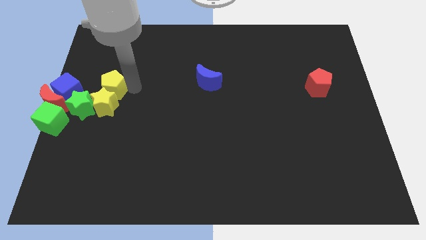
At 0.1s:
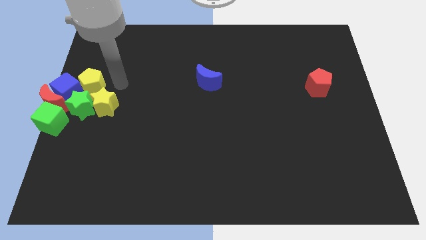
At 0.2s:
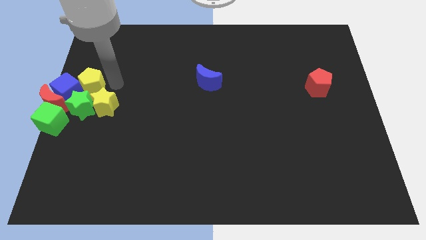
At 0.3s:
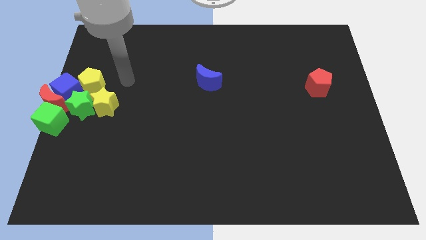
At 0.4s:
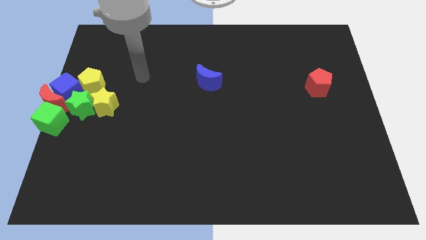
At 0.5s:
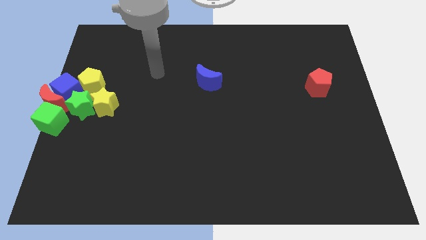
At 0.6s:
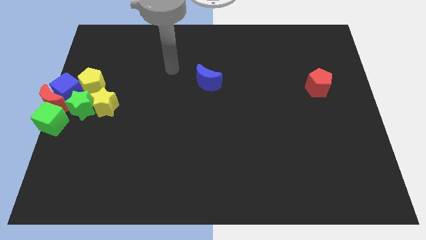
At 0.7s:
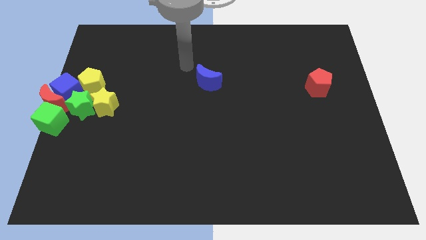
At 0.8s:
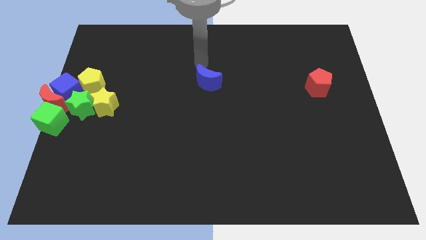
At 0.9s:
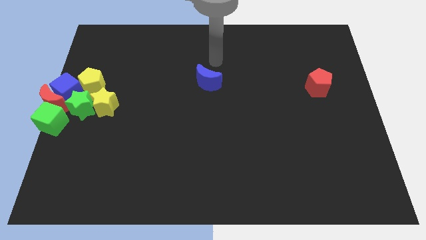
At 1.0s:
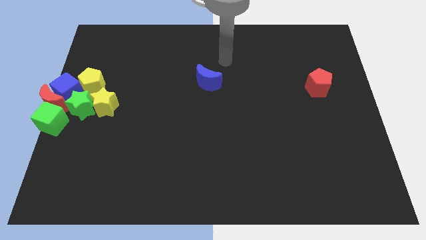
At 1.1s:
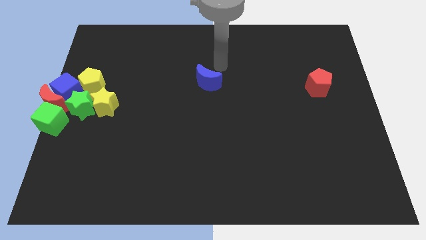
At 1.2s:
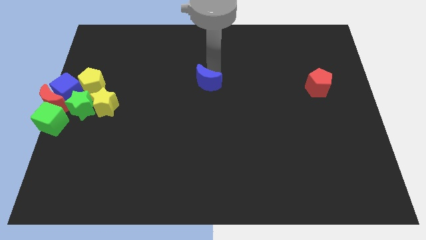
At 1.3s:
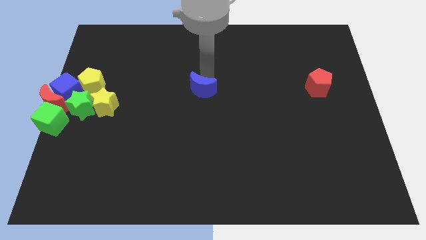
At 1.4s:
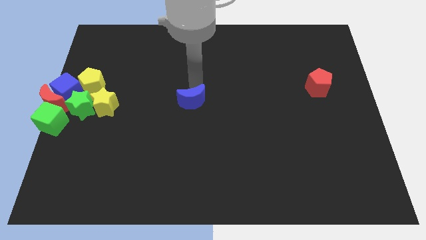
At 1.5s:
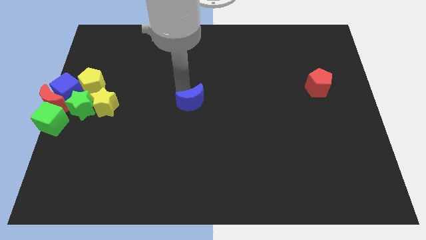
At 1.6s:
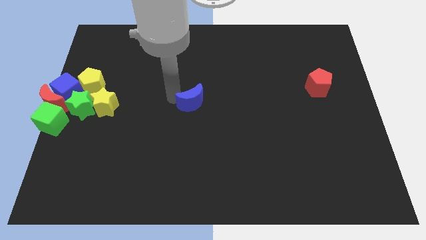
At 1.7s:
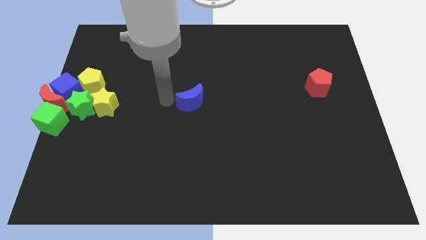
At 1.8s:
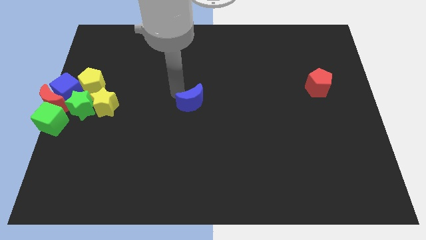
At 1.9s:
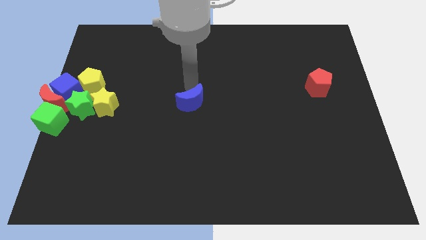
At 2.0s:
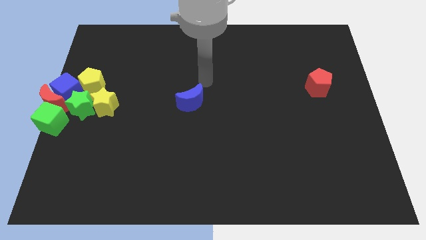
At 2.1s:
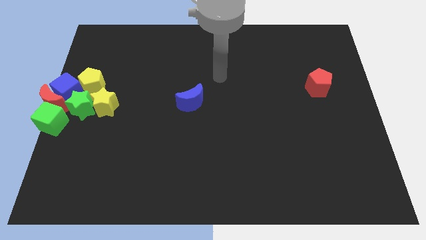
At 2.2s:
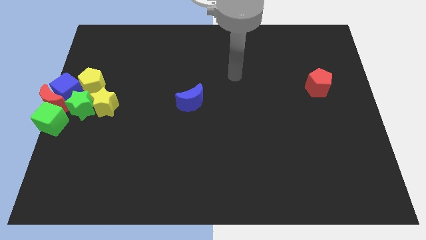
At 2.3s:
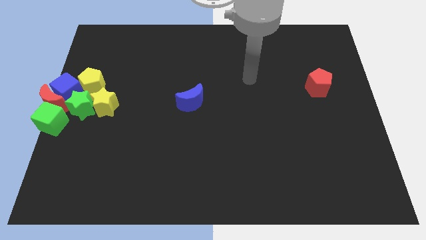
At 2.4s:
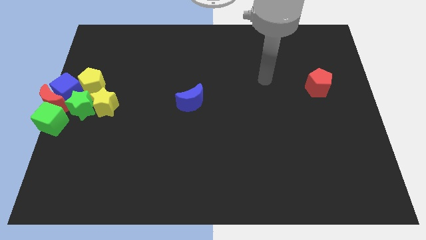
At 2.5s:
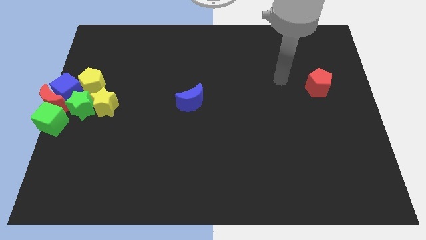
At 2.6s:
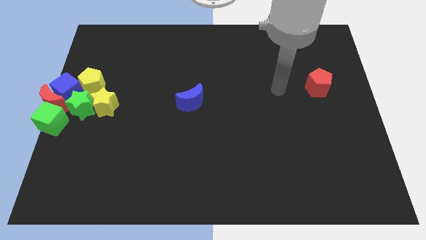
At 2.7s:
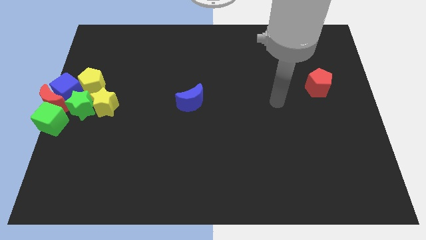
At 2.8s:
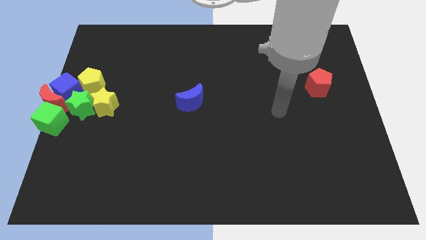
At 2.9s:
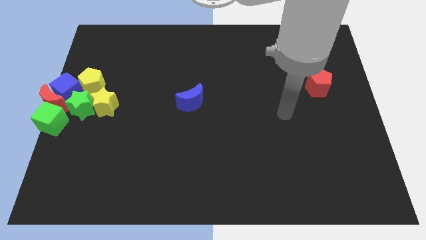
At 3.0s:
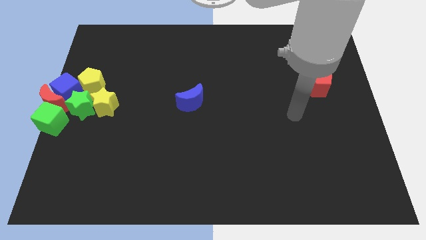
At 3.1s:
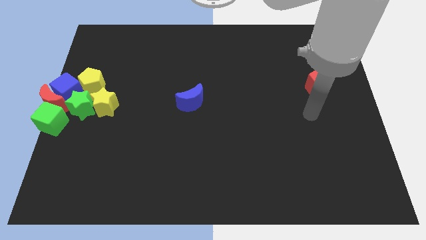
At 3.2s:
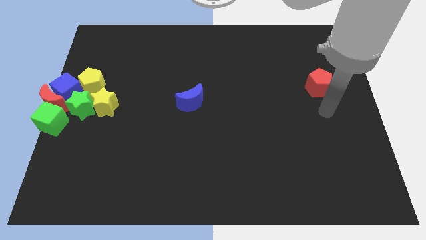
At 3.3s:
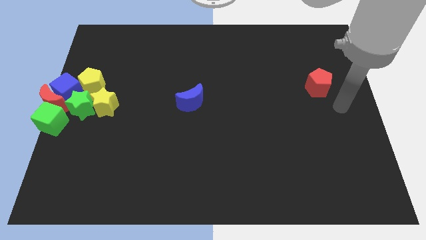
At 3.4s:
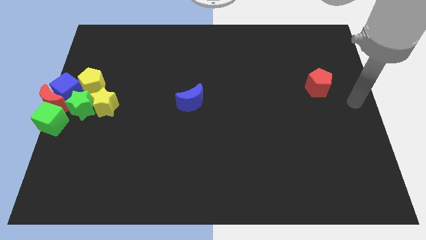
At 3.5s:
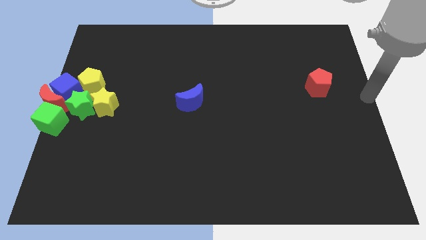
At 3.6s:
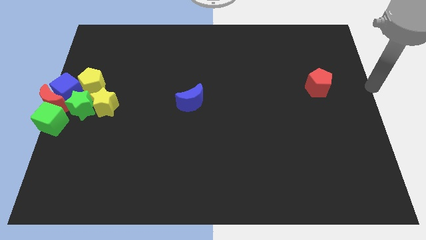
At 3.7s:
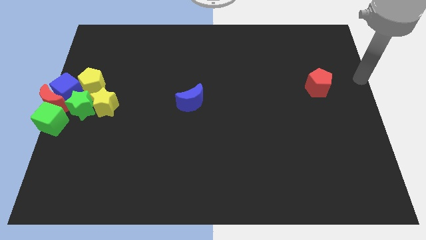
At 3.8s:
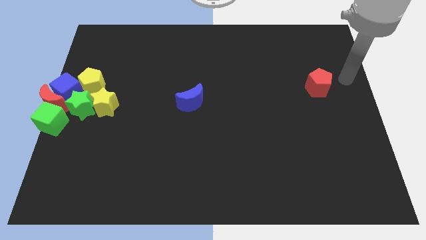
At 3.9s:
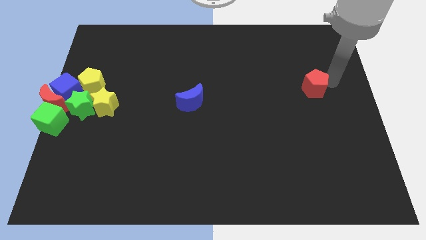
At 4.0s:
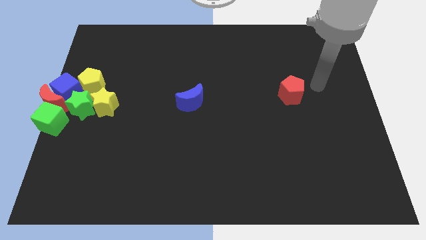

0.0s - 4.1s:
place the blue moon to right side of yellow star

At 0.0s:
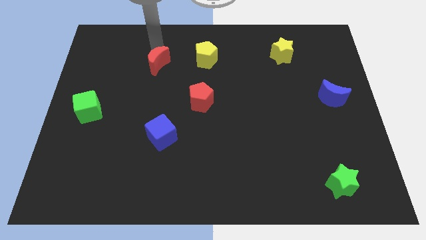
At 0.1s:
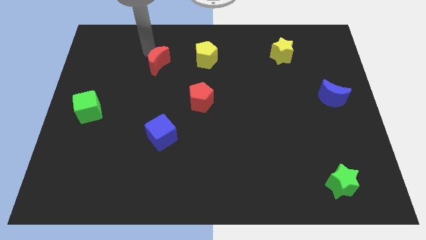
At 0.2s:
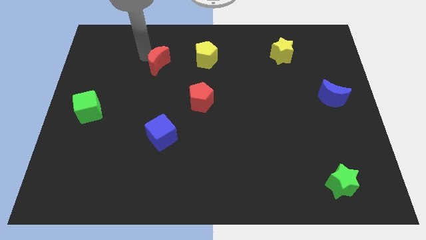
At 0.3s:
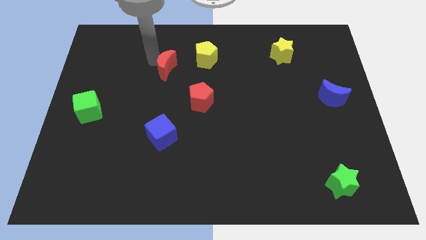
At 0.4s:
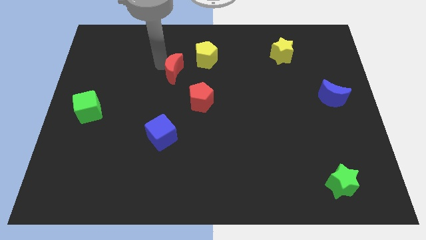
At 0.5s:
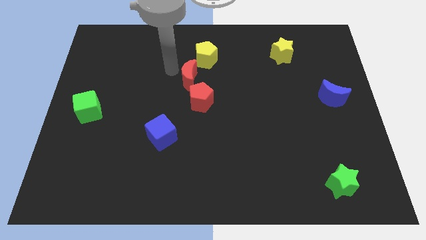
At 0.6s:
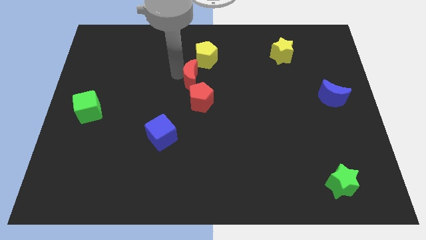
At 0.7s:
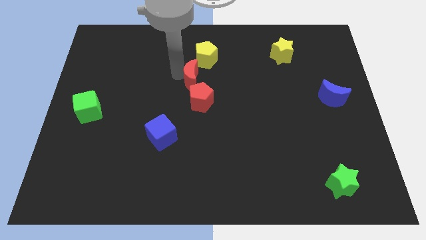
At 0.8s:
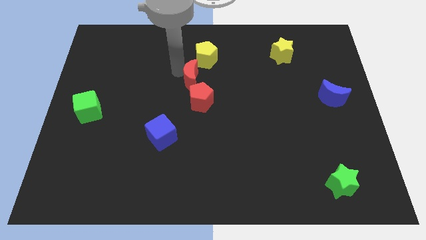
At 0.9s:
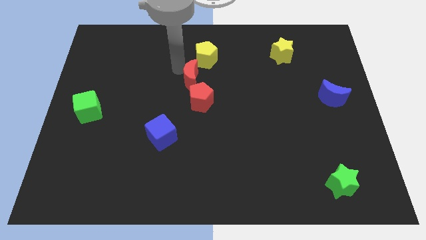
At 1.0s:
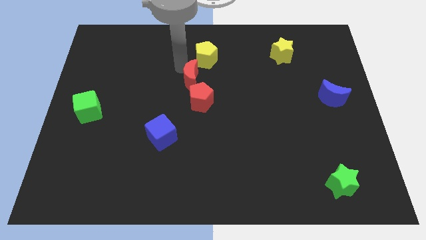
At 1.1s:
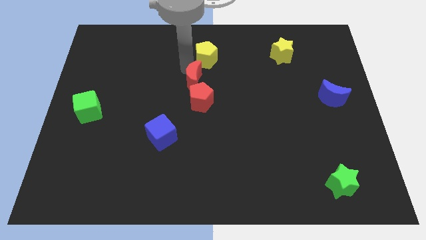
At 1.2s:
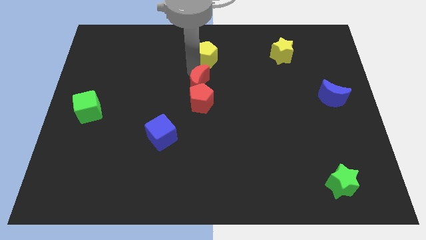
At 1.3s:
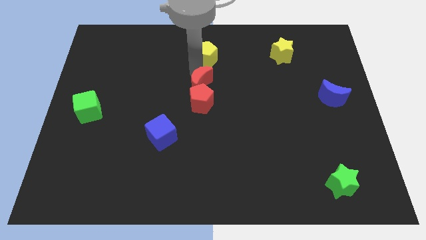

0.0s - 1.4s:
push the red crescent into the red pentagon

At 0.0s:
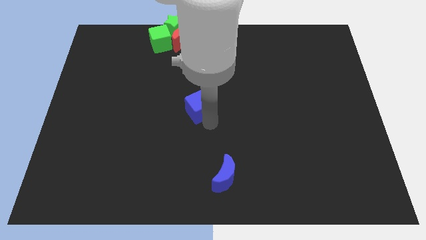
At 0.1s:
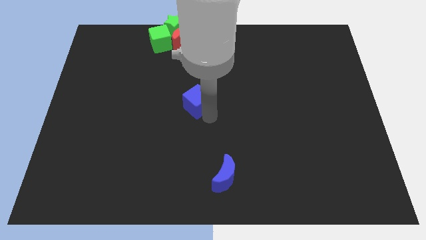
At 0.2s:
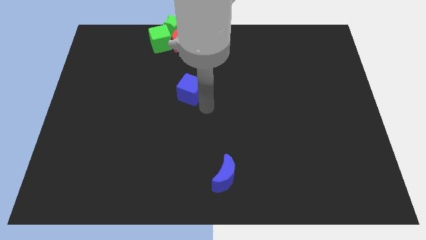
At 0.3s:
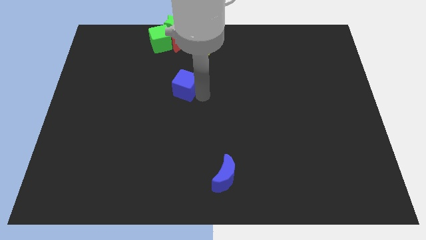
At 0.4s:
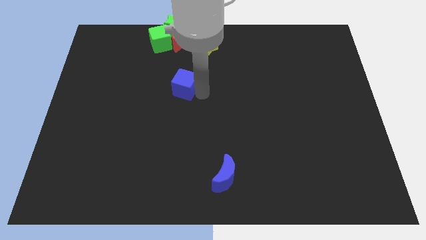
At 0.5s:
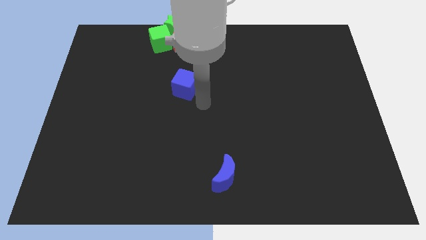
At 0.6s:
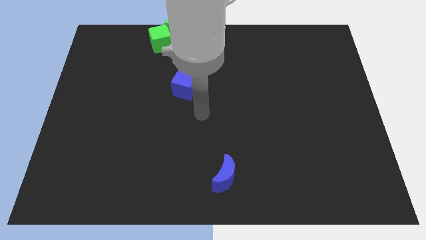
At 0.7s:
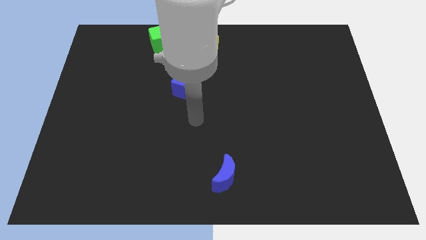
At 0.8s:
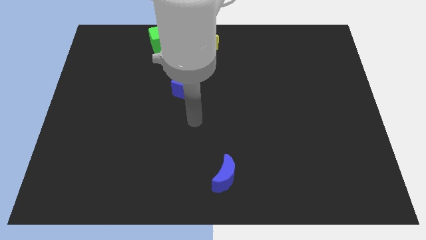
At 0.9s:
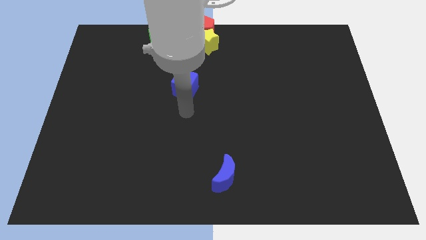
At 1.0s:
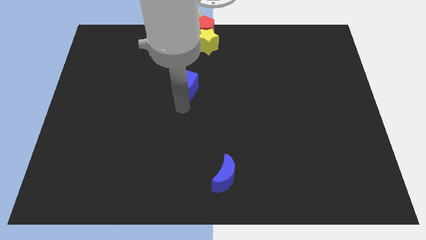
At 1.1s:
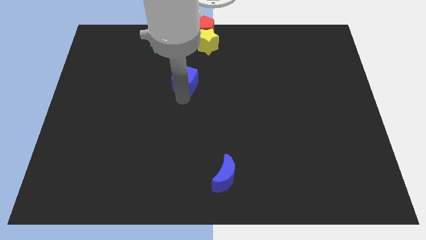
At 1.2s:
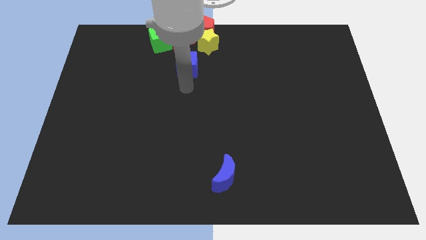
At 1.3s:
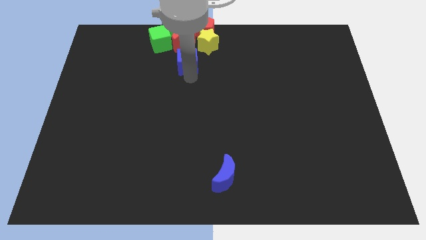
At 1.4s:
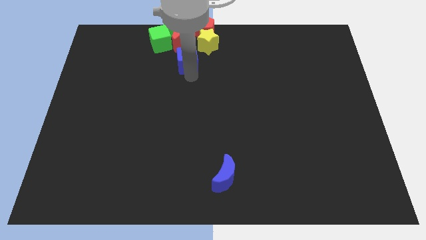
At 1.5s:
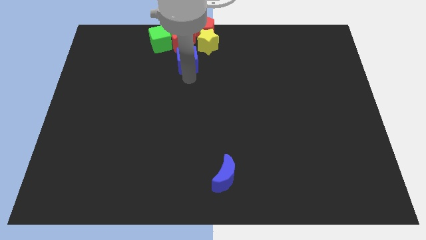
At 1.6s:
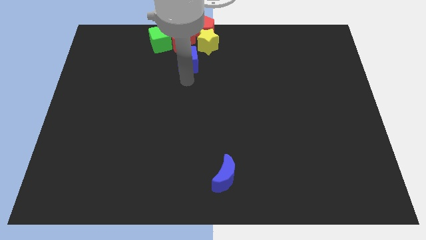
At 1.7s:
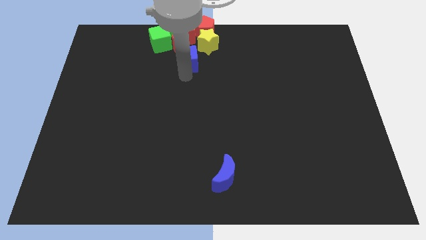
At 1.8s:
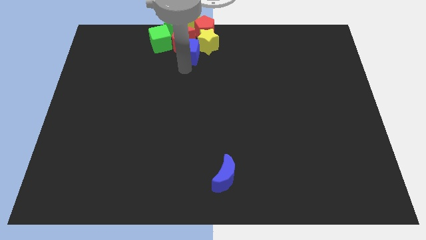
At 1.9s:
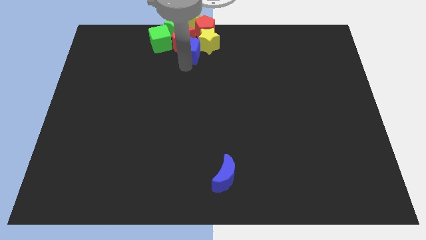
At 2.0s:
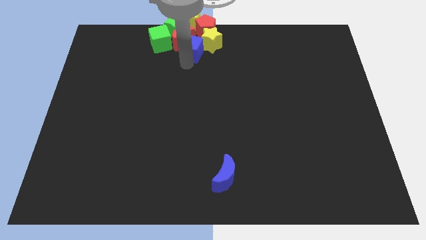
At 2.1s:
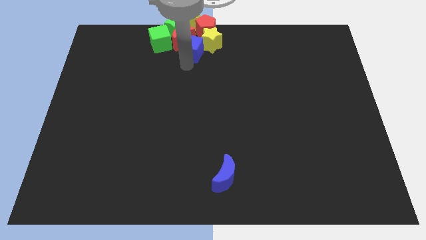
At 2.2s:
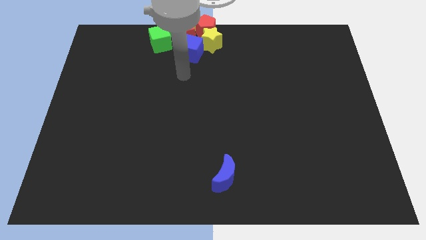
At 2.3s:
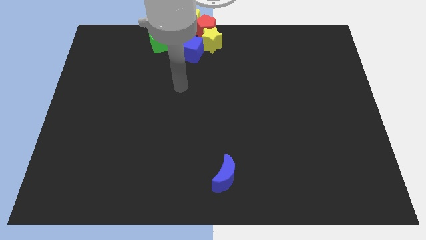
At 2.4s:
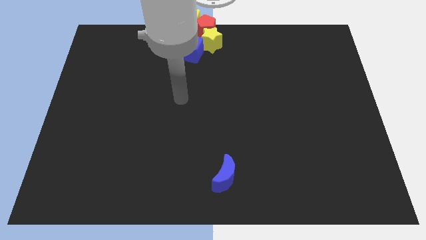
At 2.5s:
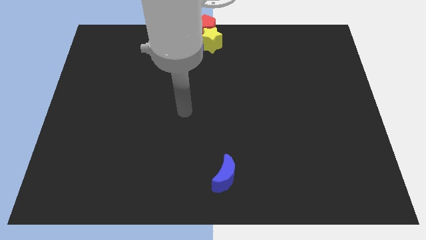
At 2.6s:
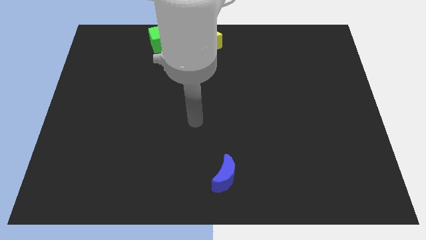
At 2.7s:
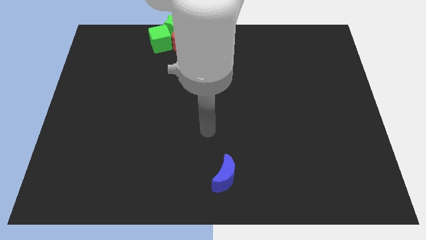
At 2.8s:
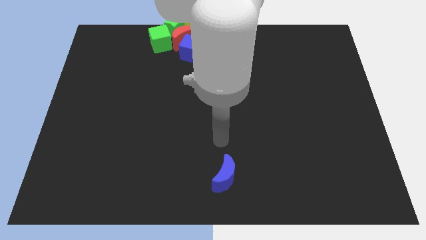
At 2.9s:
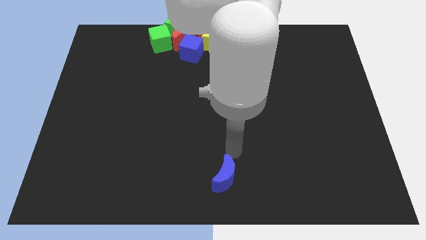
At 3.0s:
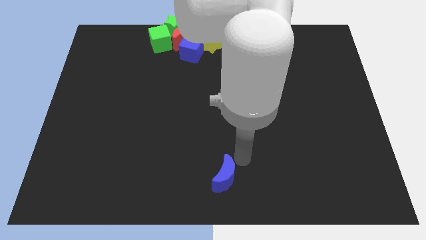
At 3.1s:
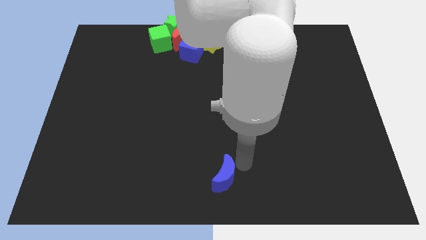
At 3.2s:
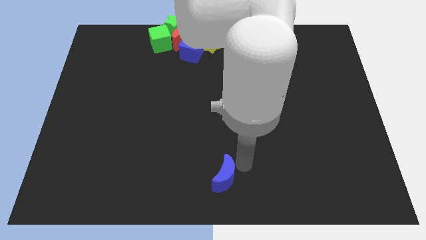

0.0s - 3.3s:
place the arm right to the blue moon
